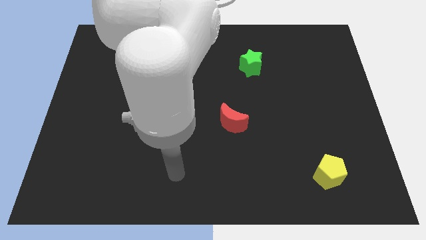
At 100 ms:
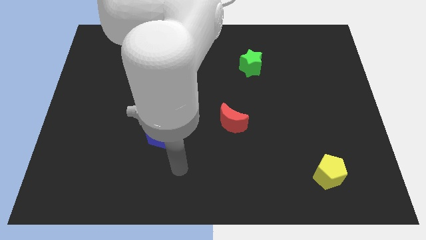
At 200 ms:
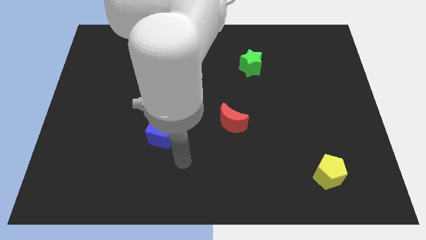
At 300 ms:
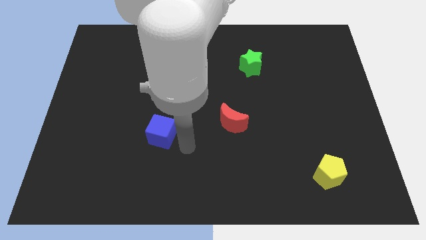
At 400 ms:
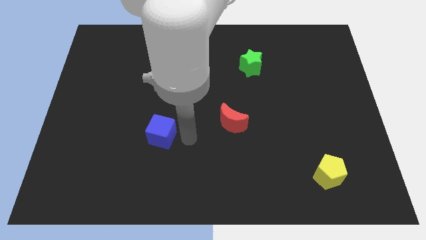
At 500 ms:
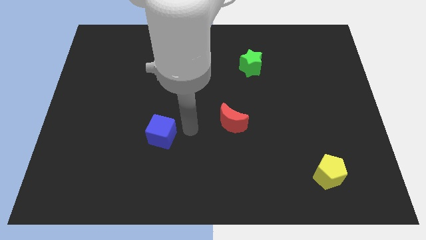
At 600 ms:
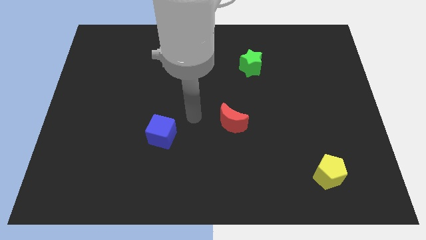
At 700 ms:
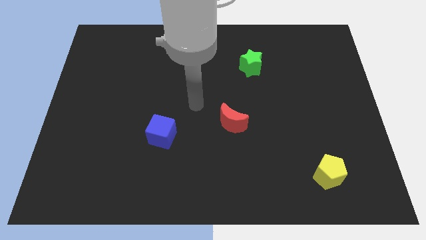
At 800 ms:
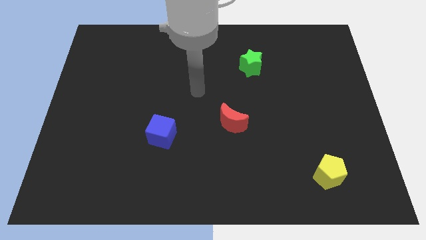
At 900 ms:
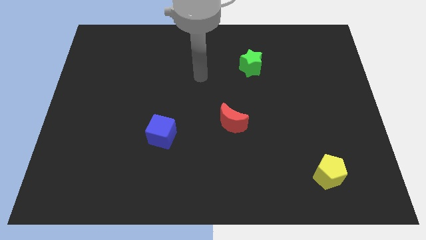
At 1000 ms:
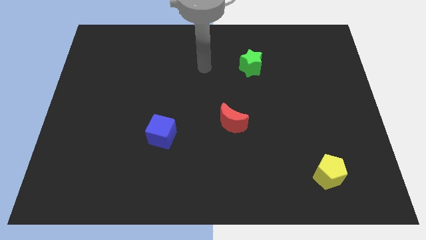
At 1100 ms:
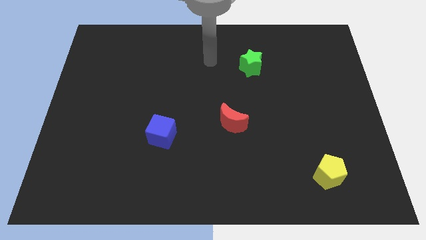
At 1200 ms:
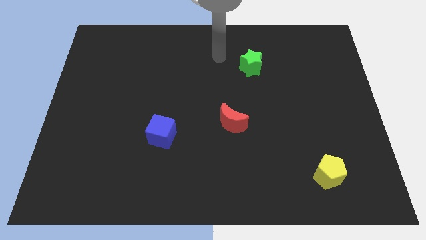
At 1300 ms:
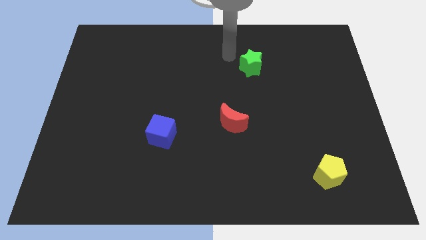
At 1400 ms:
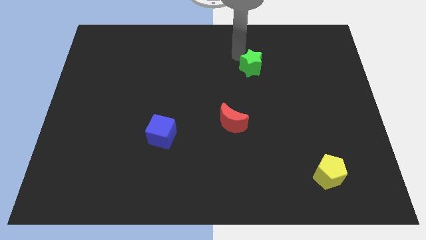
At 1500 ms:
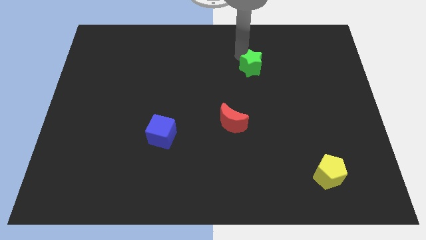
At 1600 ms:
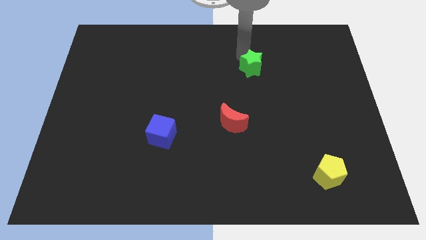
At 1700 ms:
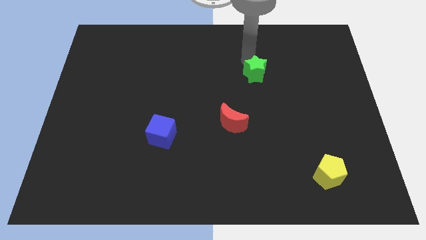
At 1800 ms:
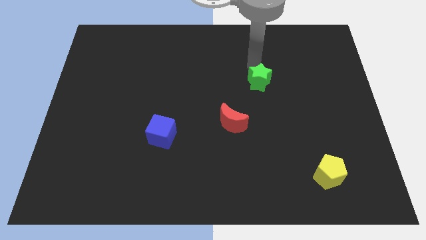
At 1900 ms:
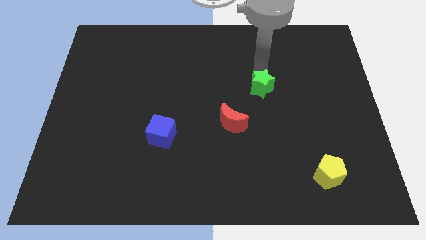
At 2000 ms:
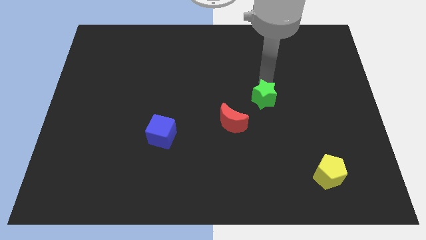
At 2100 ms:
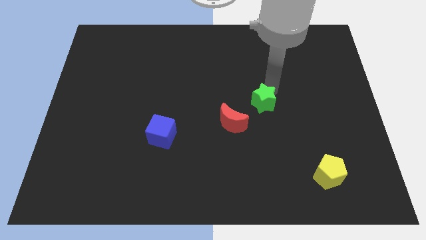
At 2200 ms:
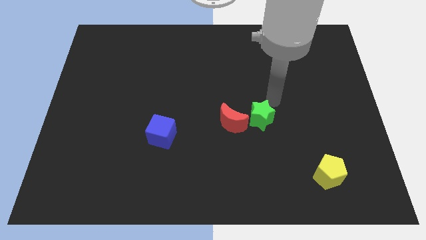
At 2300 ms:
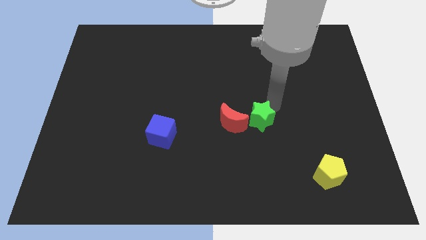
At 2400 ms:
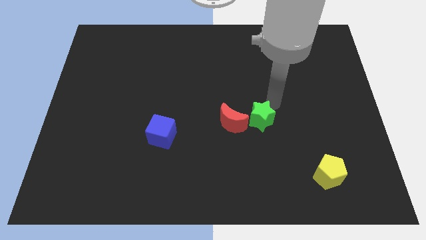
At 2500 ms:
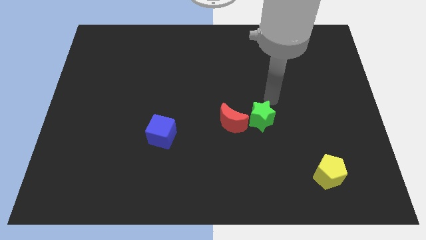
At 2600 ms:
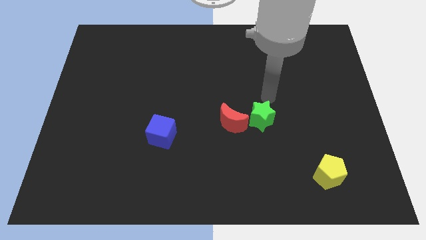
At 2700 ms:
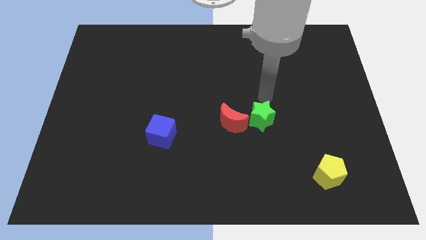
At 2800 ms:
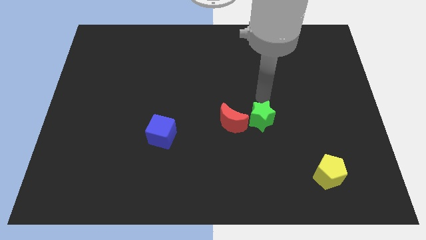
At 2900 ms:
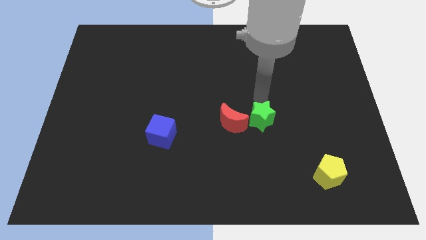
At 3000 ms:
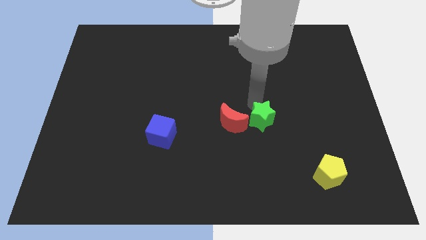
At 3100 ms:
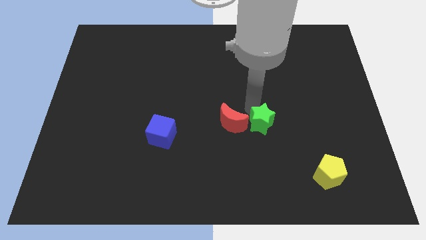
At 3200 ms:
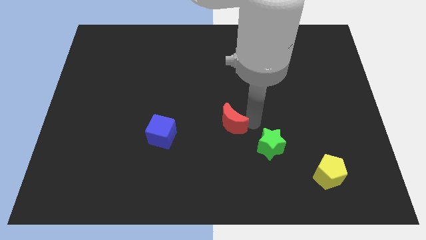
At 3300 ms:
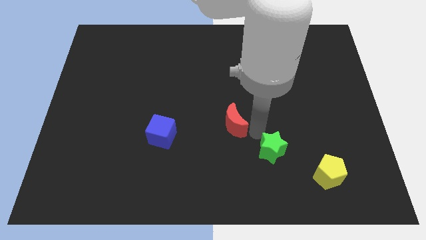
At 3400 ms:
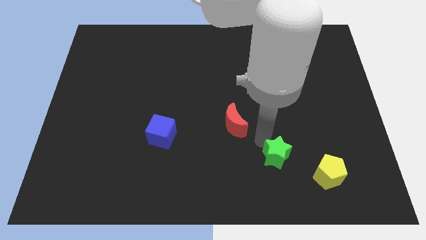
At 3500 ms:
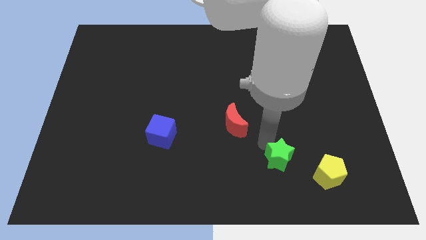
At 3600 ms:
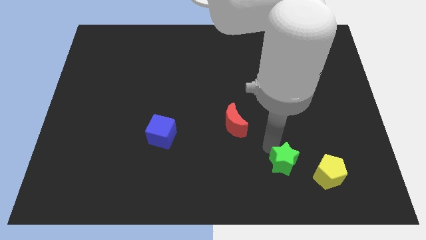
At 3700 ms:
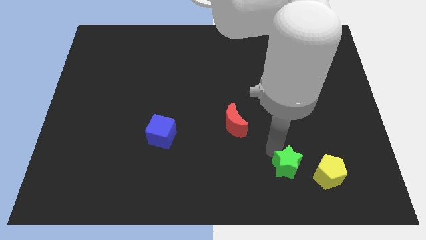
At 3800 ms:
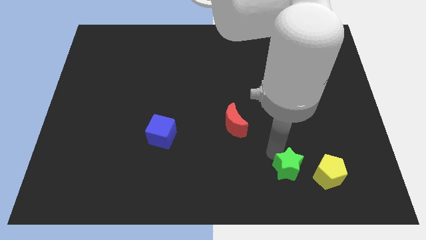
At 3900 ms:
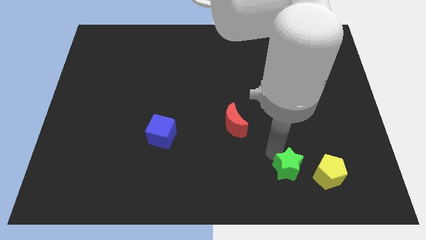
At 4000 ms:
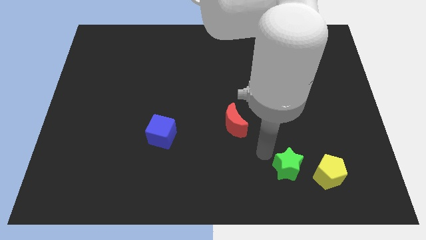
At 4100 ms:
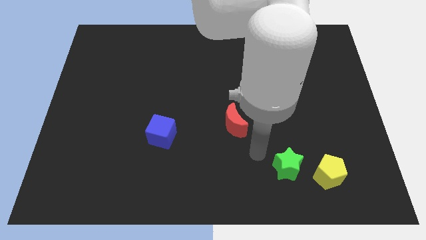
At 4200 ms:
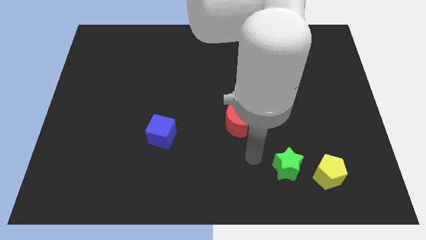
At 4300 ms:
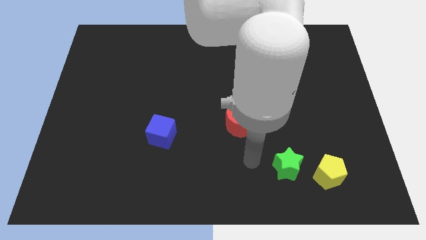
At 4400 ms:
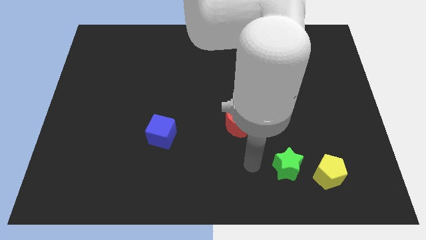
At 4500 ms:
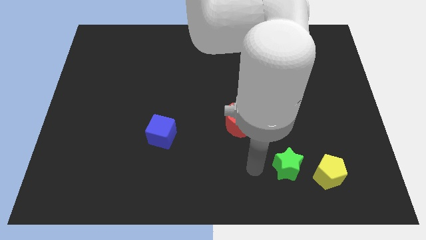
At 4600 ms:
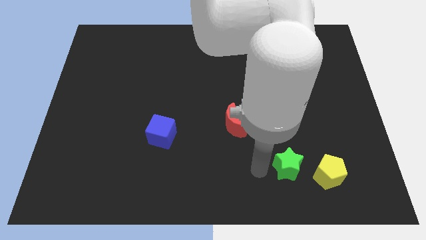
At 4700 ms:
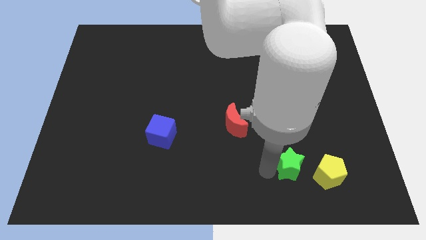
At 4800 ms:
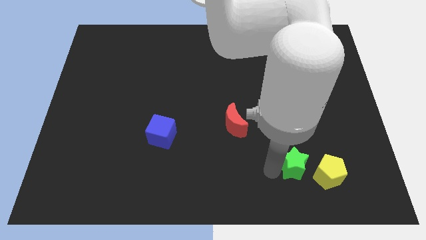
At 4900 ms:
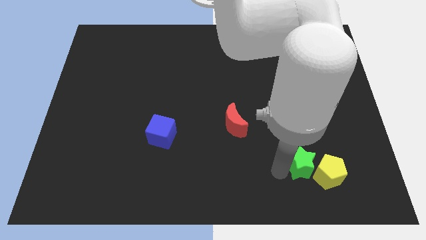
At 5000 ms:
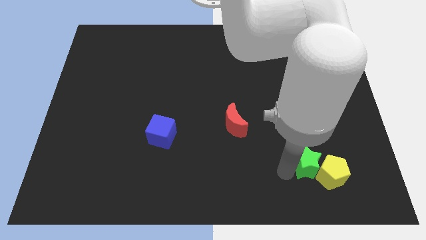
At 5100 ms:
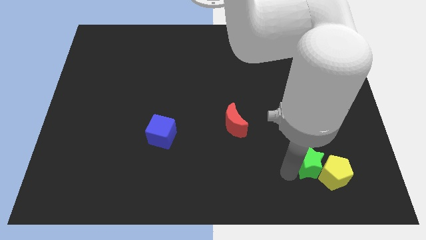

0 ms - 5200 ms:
put the green block to the yellow block

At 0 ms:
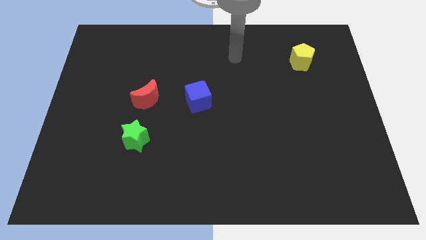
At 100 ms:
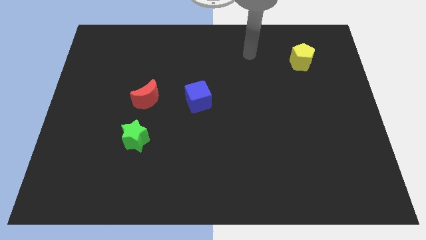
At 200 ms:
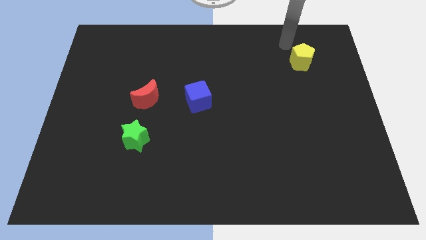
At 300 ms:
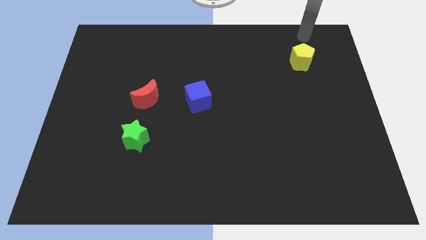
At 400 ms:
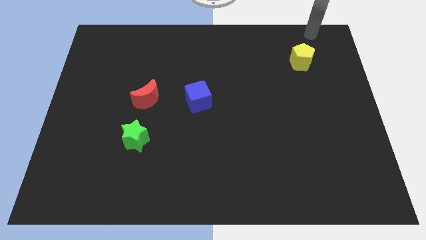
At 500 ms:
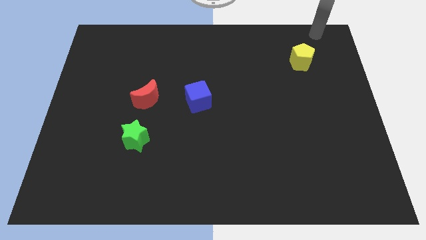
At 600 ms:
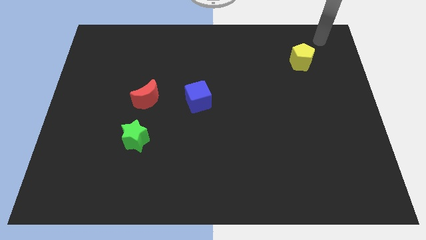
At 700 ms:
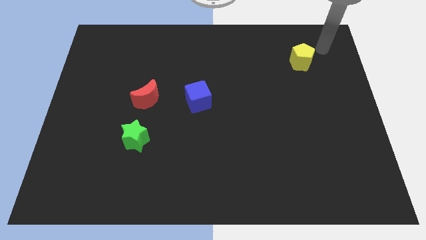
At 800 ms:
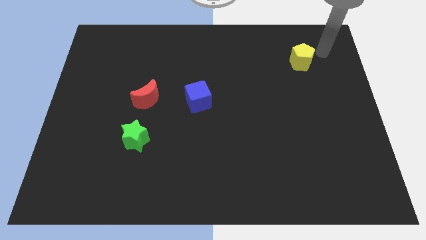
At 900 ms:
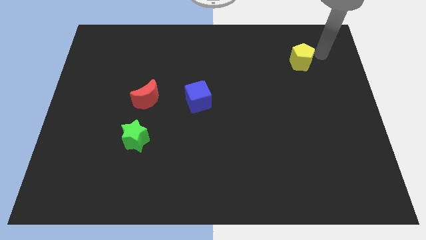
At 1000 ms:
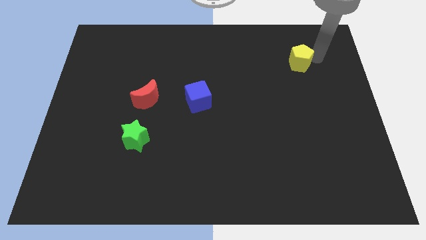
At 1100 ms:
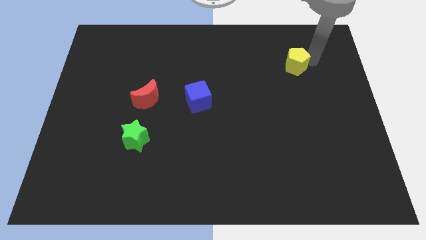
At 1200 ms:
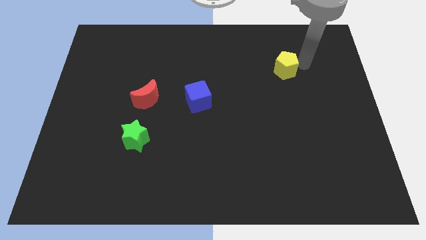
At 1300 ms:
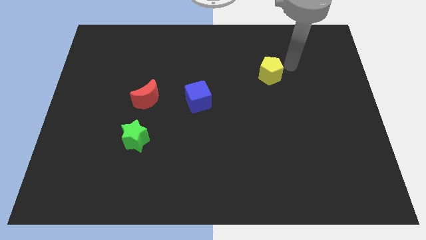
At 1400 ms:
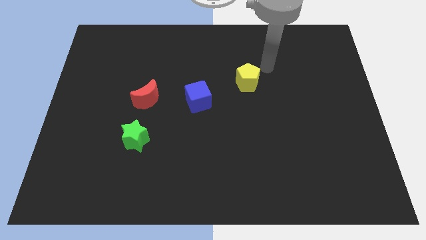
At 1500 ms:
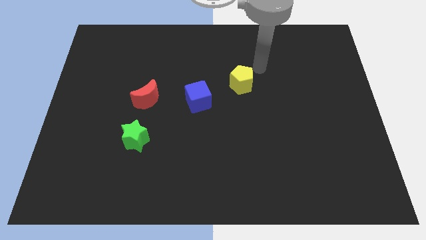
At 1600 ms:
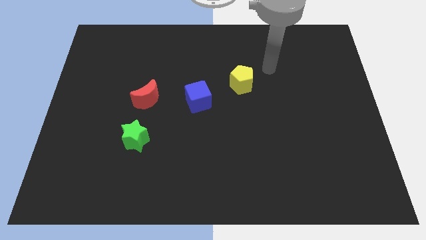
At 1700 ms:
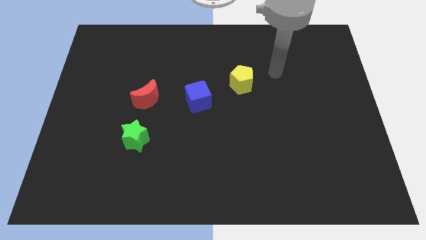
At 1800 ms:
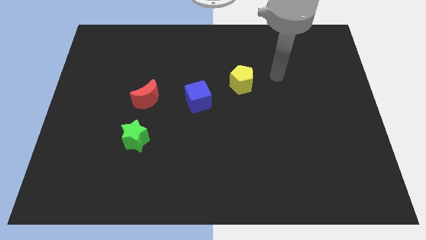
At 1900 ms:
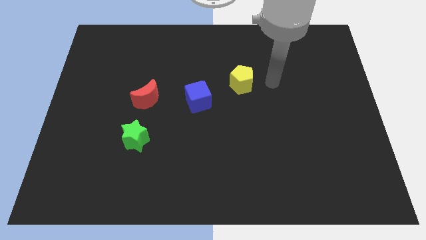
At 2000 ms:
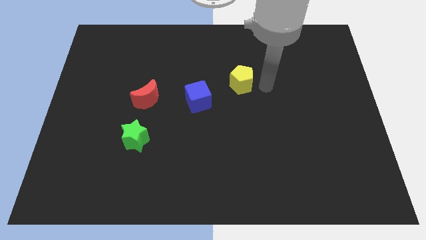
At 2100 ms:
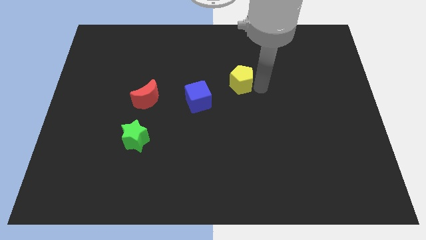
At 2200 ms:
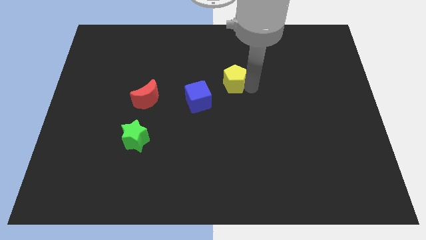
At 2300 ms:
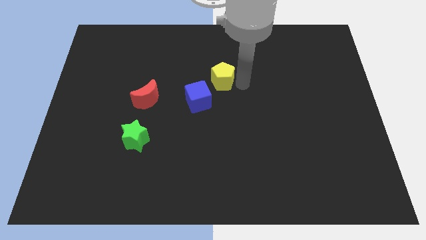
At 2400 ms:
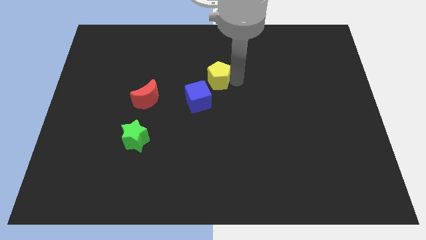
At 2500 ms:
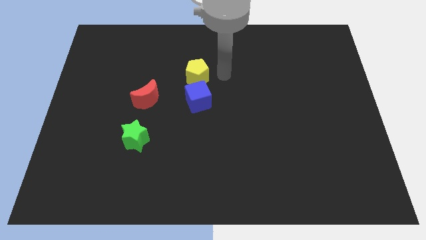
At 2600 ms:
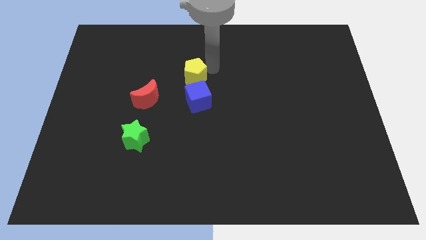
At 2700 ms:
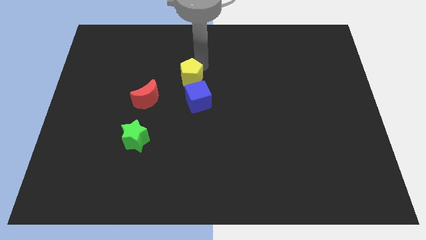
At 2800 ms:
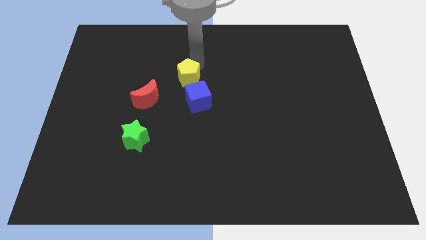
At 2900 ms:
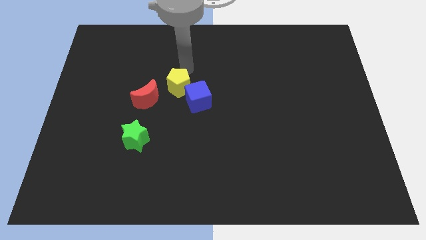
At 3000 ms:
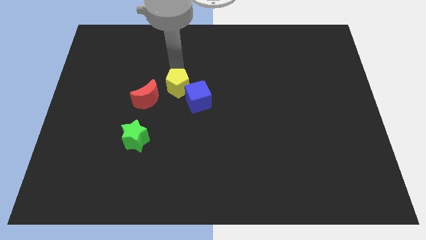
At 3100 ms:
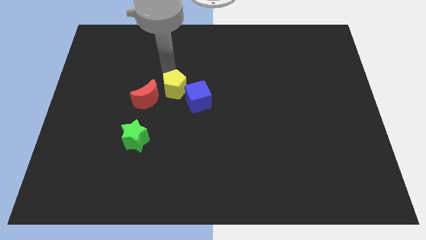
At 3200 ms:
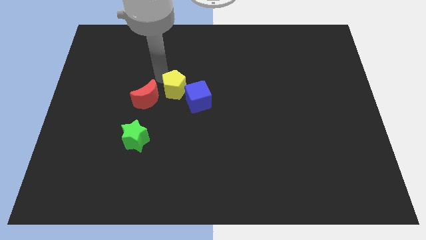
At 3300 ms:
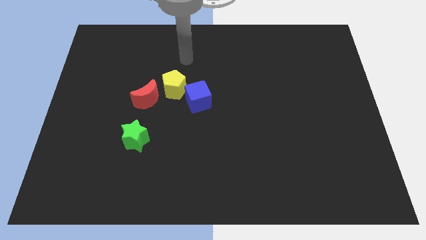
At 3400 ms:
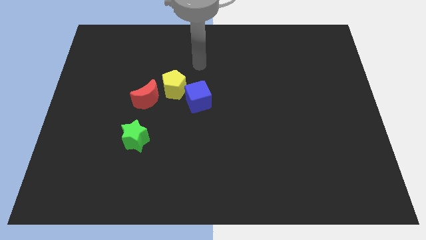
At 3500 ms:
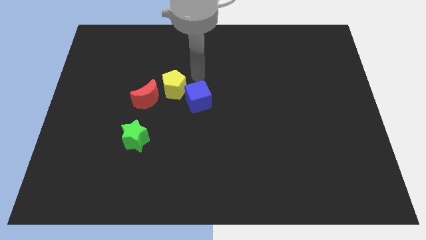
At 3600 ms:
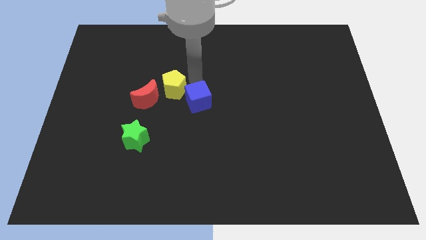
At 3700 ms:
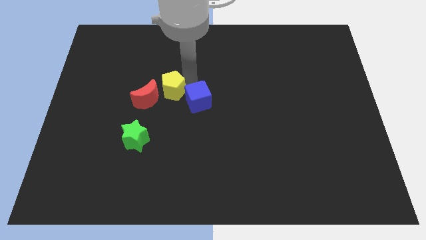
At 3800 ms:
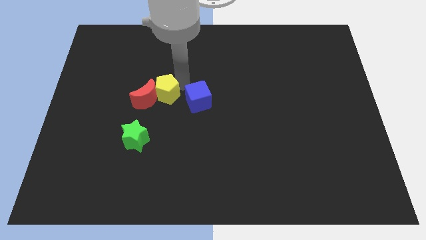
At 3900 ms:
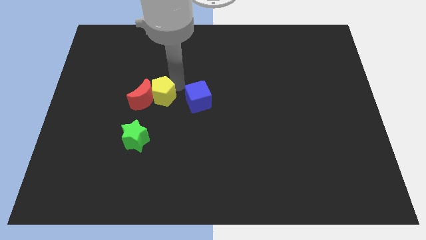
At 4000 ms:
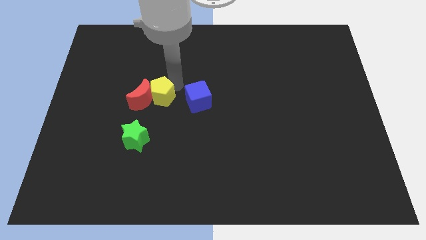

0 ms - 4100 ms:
push the yellow block towards the red moon
